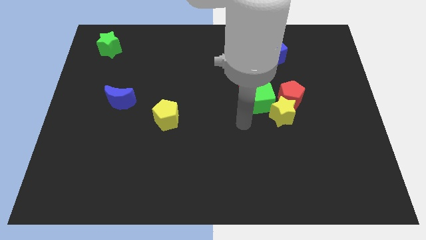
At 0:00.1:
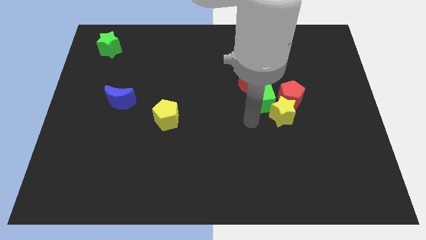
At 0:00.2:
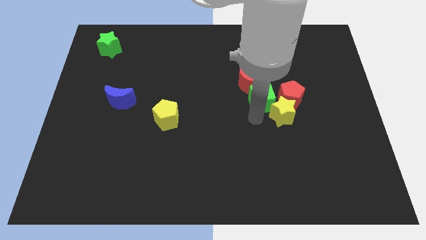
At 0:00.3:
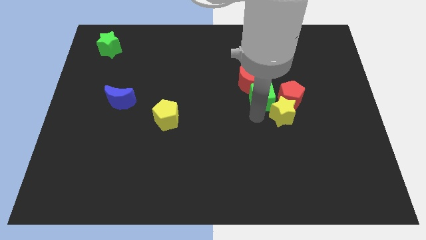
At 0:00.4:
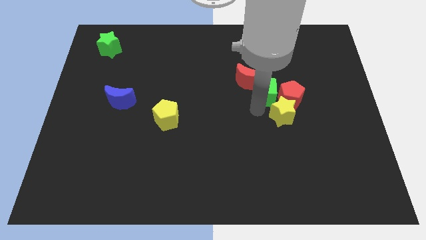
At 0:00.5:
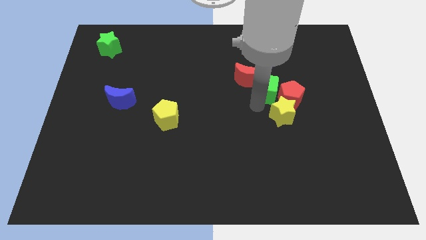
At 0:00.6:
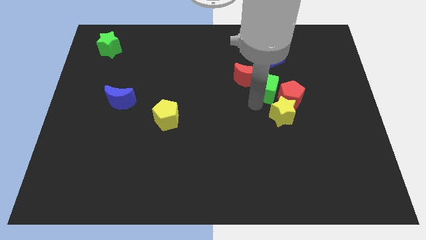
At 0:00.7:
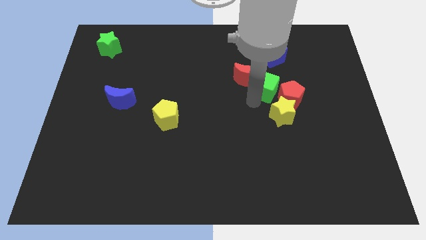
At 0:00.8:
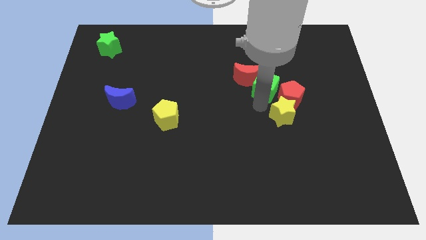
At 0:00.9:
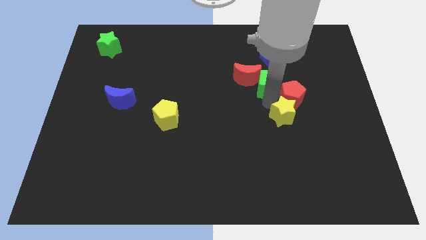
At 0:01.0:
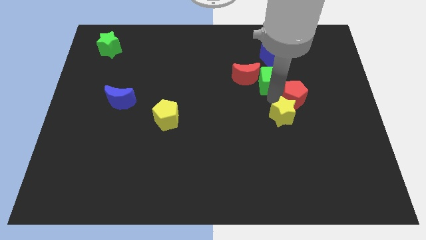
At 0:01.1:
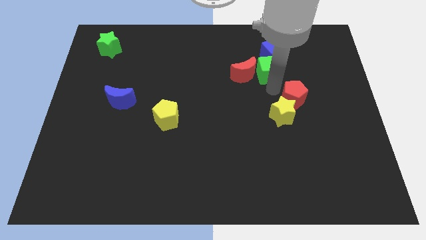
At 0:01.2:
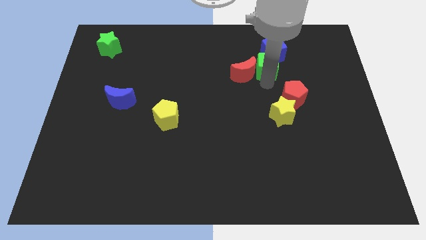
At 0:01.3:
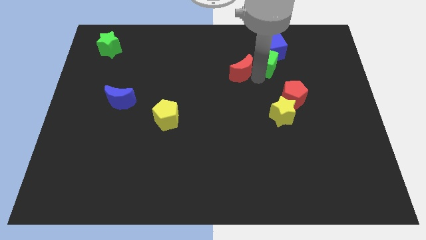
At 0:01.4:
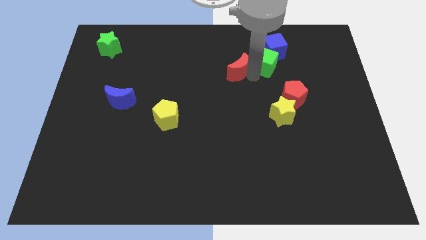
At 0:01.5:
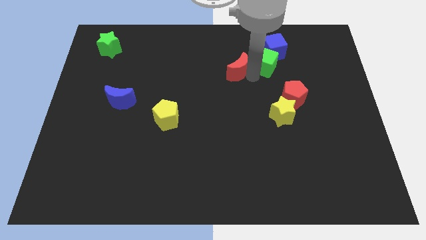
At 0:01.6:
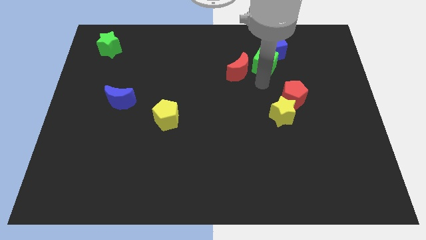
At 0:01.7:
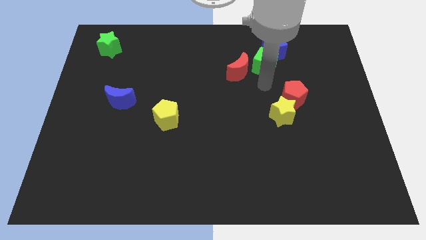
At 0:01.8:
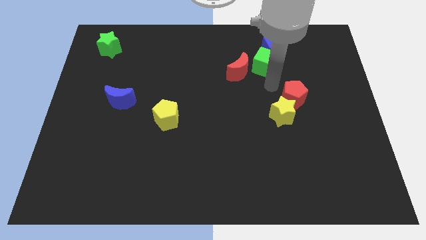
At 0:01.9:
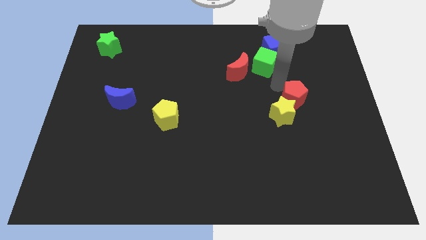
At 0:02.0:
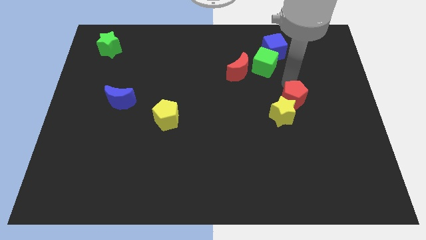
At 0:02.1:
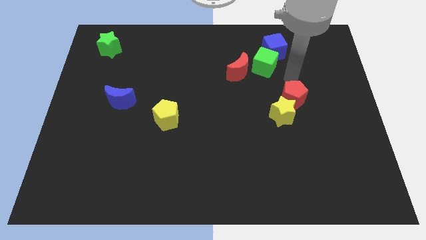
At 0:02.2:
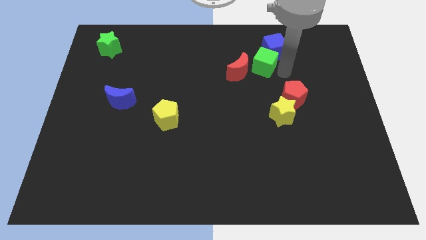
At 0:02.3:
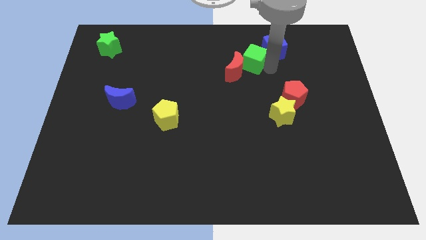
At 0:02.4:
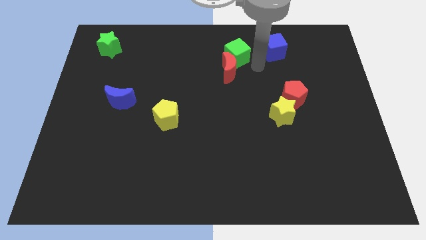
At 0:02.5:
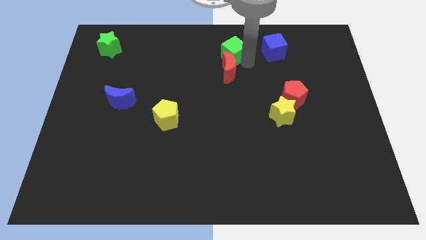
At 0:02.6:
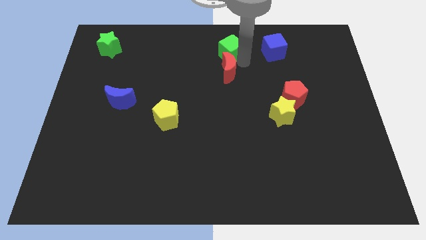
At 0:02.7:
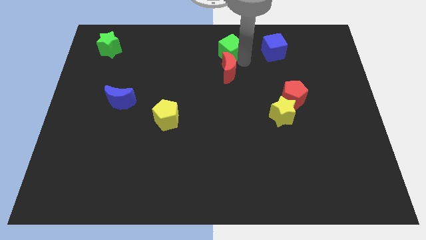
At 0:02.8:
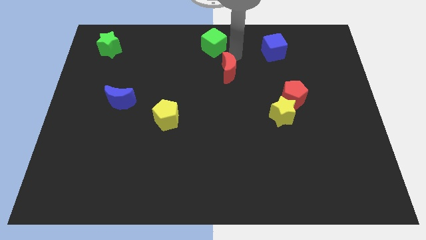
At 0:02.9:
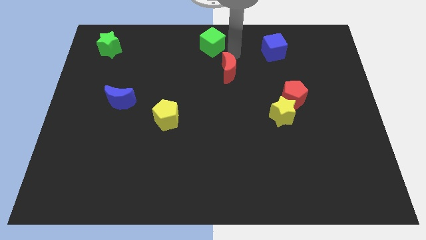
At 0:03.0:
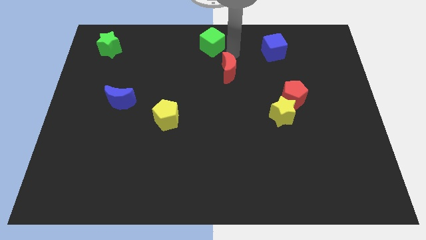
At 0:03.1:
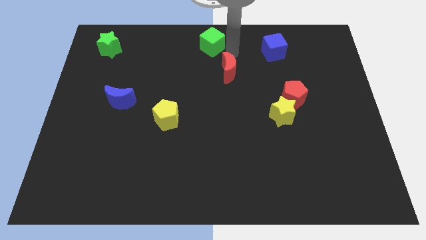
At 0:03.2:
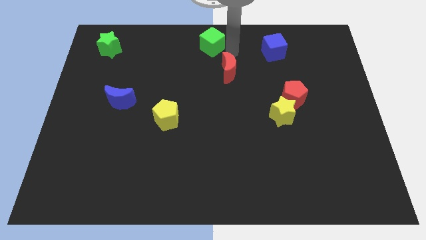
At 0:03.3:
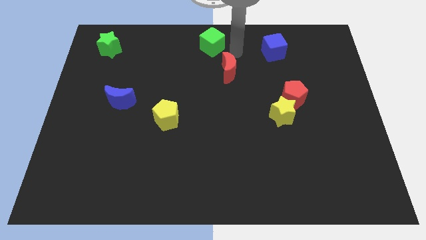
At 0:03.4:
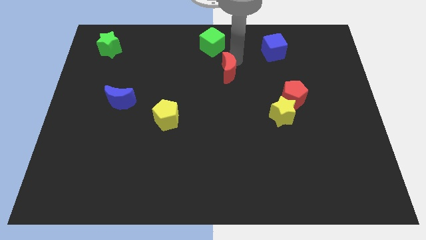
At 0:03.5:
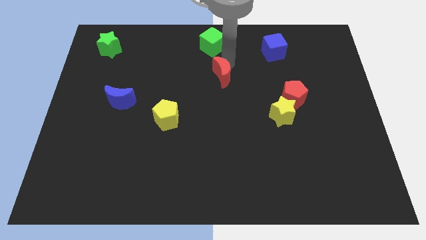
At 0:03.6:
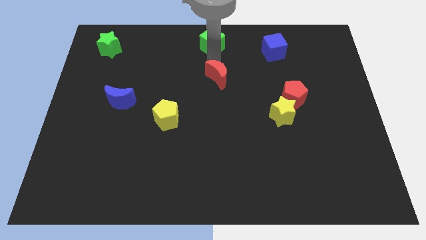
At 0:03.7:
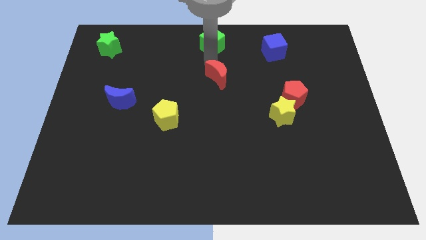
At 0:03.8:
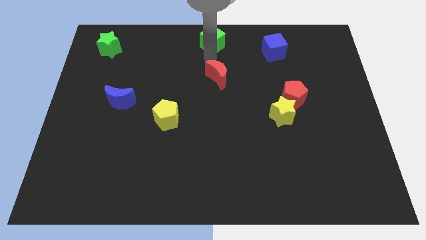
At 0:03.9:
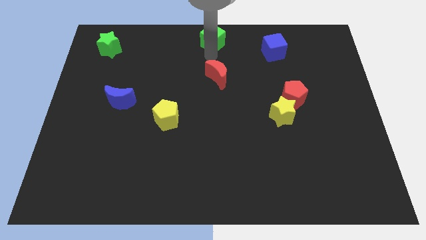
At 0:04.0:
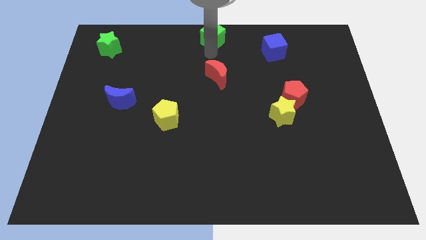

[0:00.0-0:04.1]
push green cube to the top center

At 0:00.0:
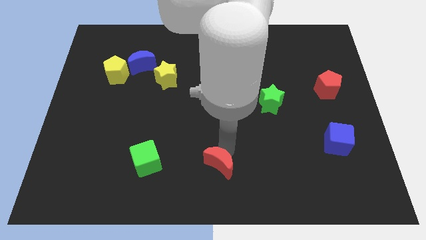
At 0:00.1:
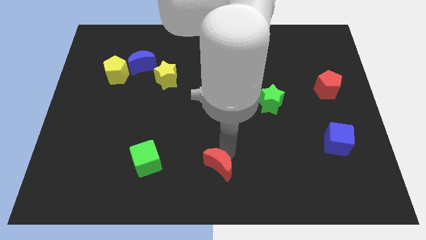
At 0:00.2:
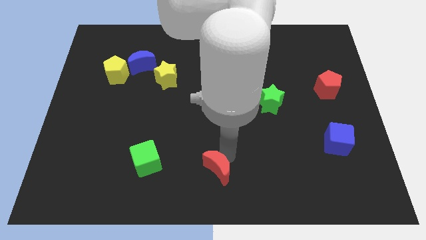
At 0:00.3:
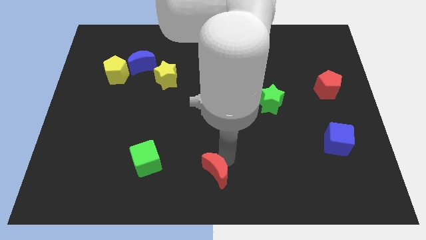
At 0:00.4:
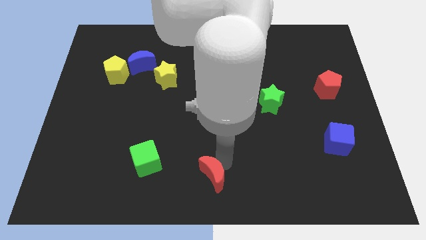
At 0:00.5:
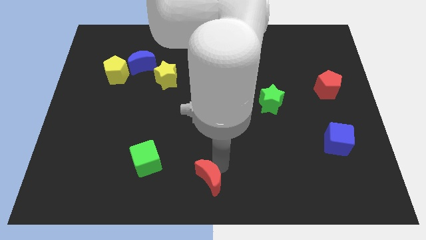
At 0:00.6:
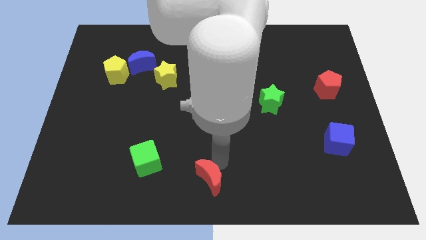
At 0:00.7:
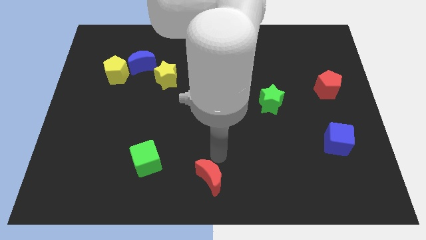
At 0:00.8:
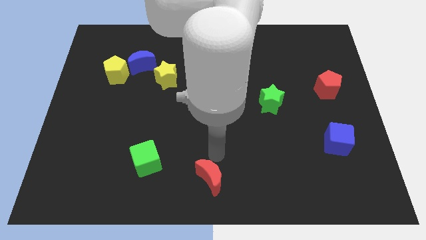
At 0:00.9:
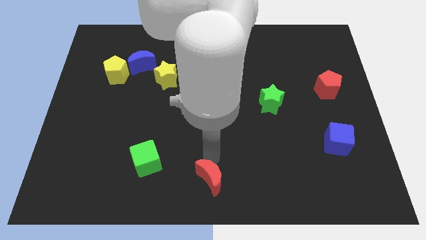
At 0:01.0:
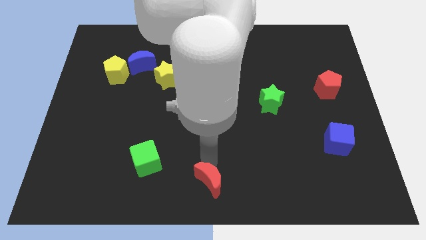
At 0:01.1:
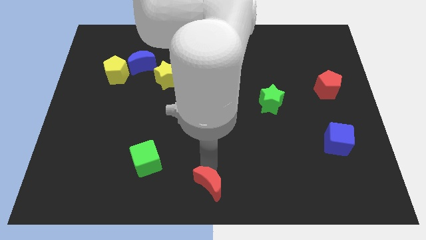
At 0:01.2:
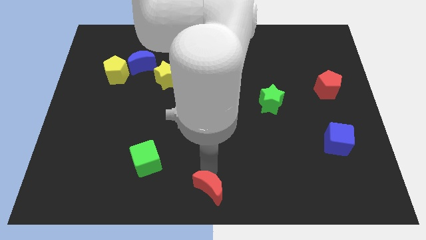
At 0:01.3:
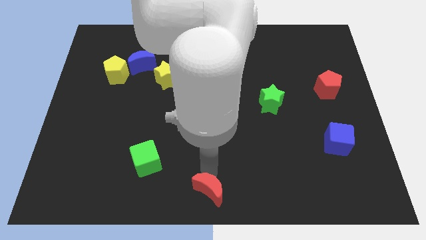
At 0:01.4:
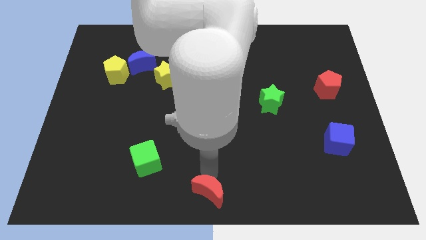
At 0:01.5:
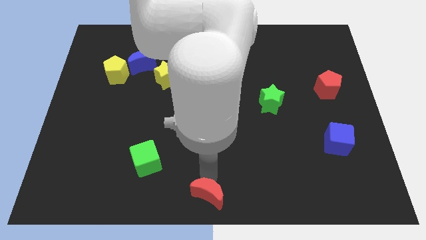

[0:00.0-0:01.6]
place the red crescent towards the bottom center of the board

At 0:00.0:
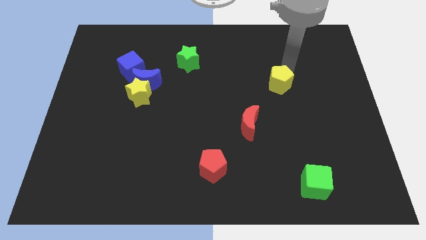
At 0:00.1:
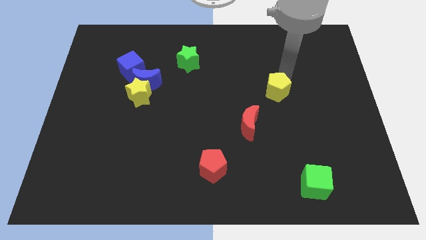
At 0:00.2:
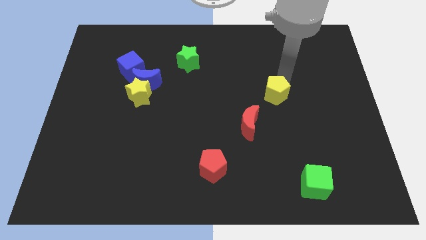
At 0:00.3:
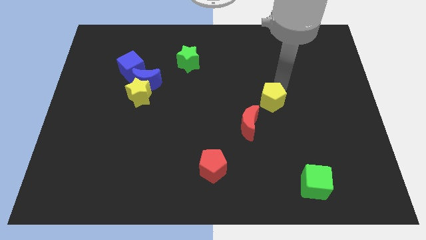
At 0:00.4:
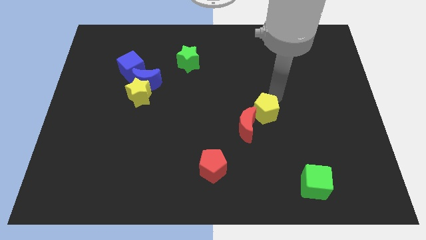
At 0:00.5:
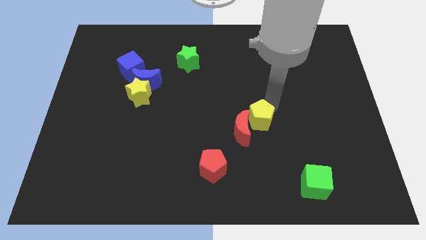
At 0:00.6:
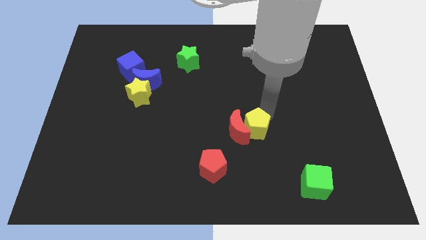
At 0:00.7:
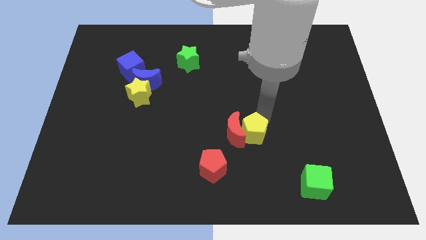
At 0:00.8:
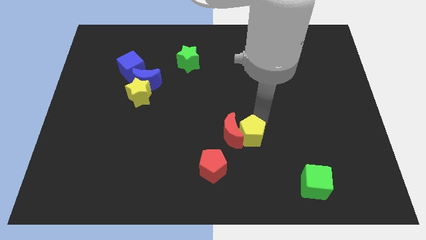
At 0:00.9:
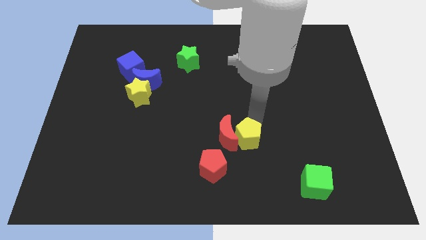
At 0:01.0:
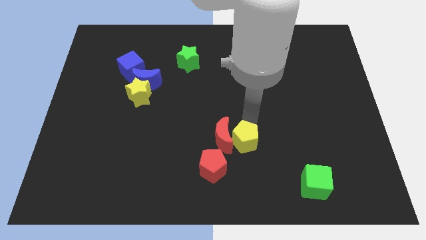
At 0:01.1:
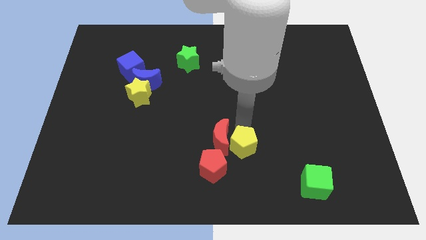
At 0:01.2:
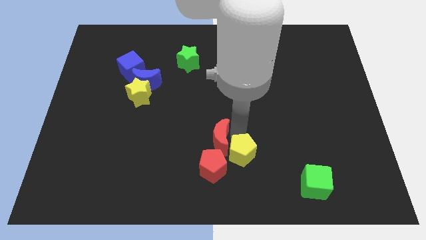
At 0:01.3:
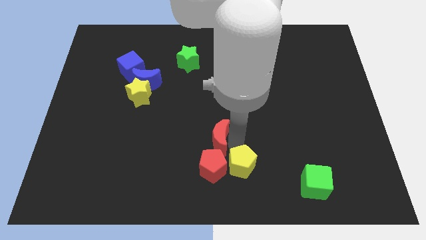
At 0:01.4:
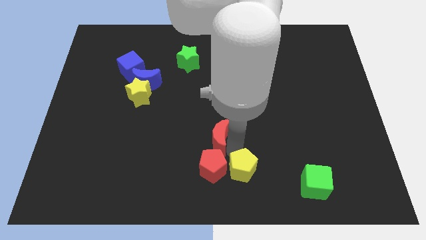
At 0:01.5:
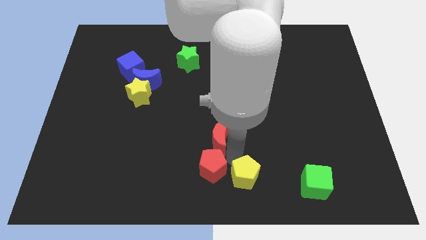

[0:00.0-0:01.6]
slide the yellow pentagon parallel right to the red pentagon

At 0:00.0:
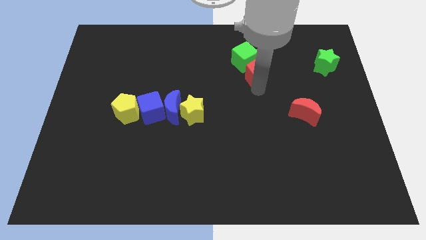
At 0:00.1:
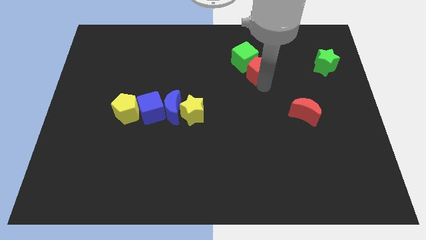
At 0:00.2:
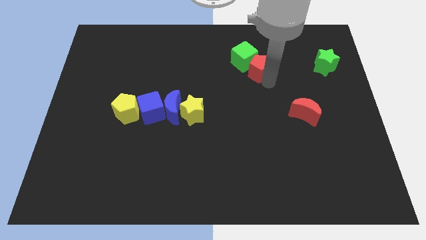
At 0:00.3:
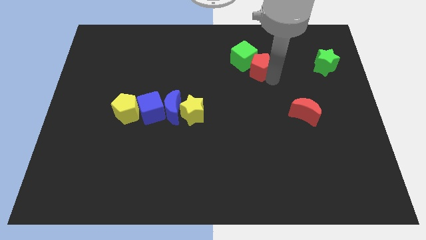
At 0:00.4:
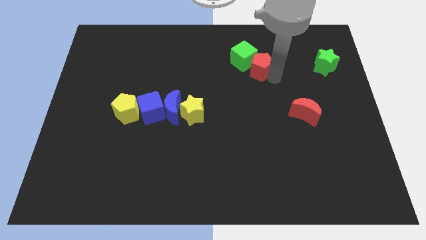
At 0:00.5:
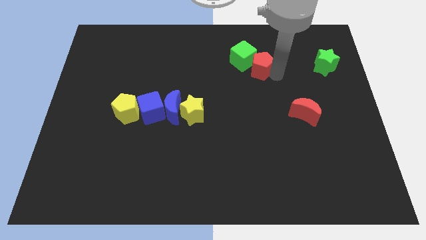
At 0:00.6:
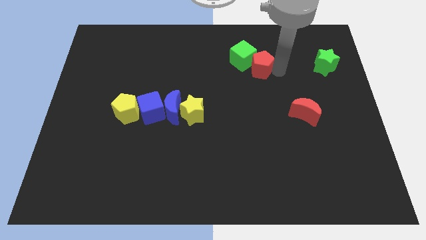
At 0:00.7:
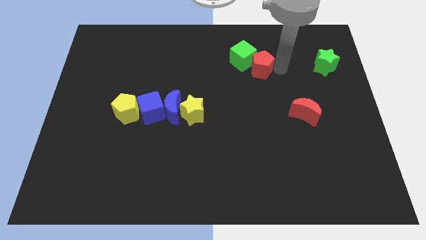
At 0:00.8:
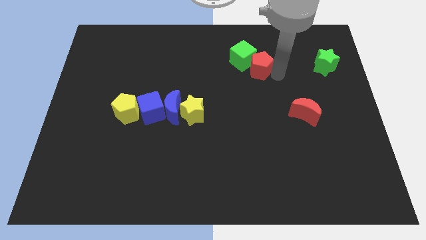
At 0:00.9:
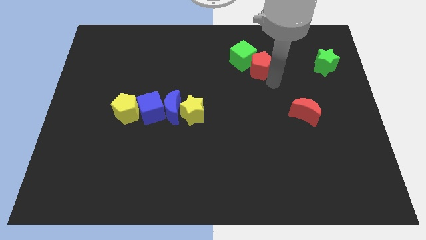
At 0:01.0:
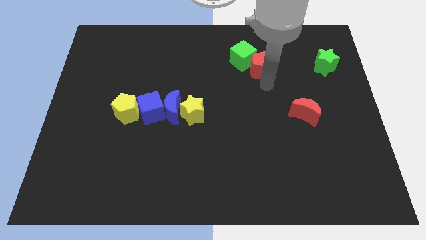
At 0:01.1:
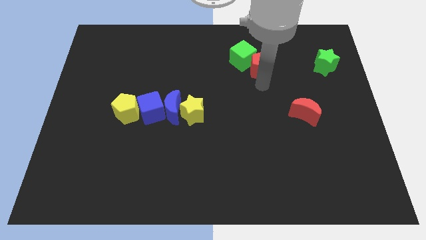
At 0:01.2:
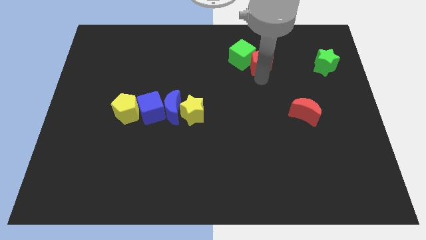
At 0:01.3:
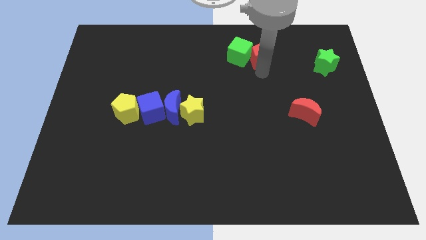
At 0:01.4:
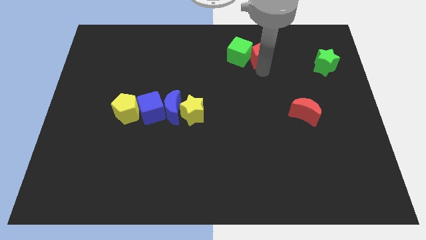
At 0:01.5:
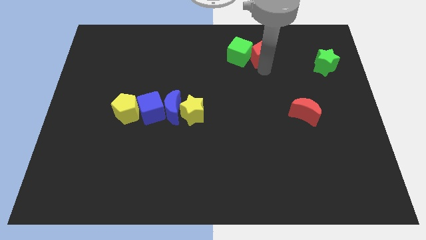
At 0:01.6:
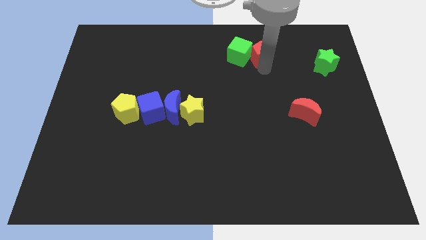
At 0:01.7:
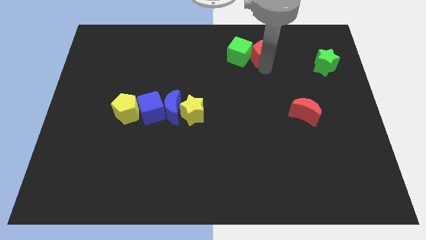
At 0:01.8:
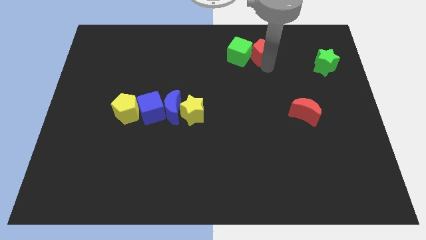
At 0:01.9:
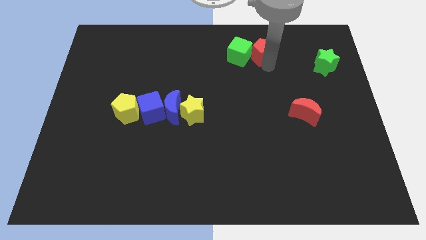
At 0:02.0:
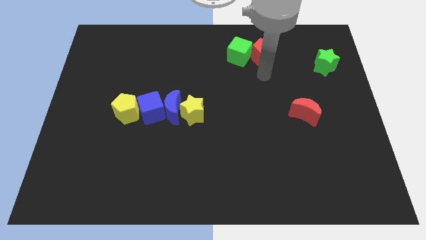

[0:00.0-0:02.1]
push the red pentagon into the green cube
